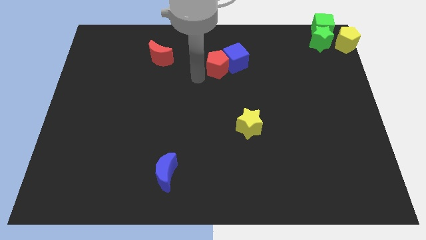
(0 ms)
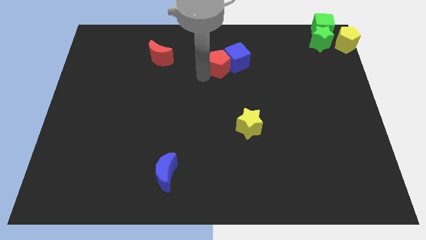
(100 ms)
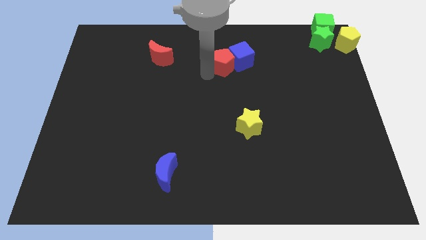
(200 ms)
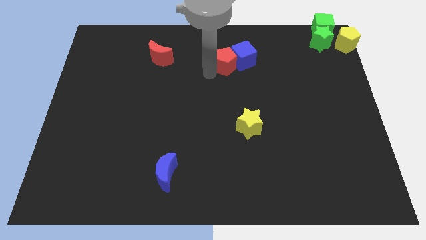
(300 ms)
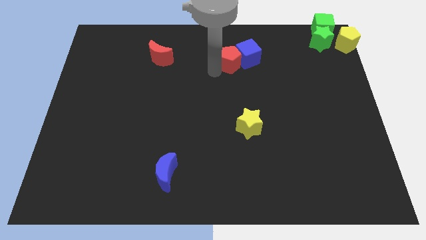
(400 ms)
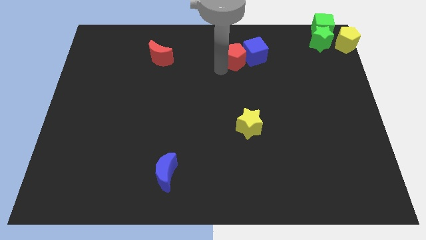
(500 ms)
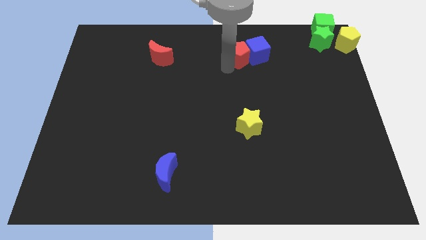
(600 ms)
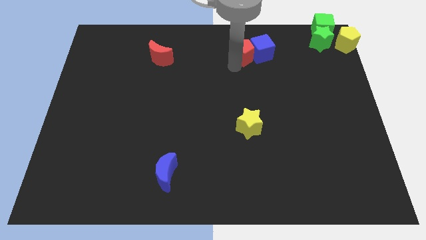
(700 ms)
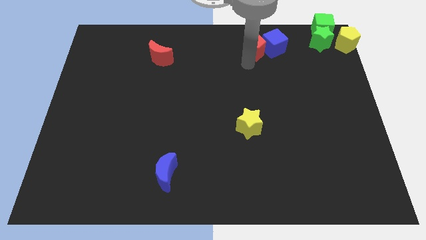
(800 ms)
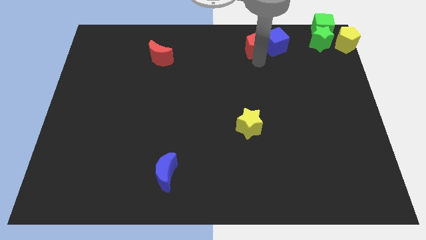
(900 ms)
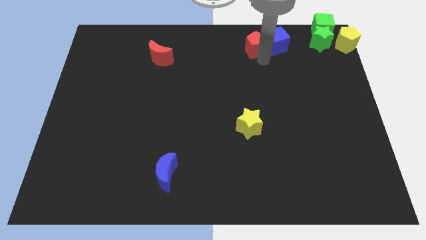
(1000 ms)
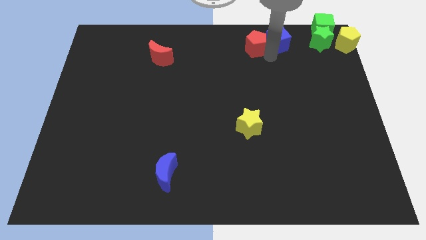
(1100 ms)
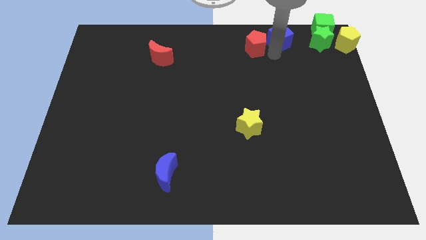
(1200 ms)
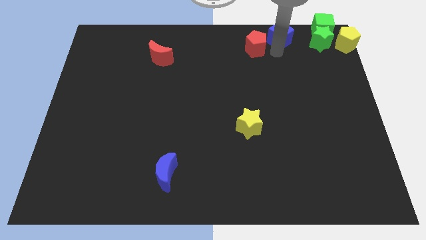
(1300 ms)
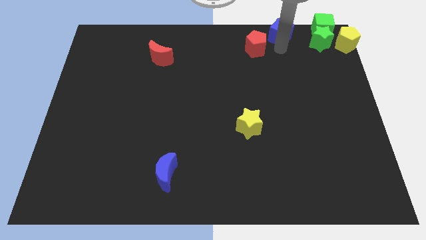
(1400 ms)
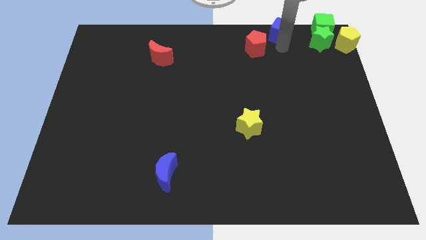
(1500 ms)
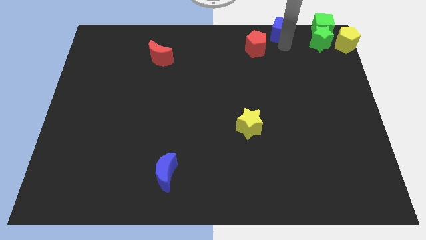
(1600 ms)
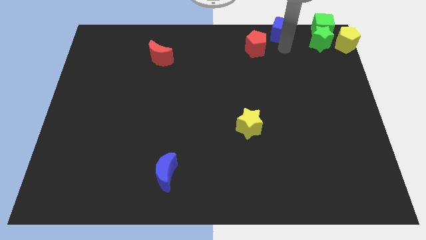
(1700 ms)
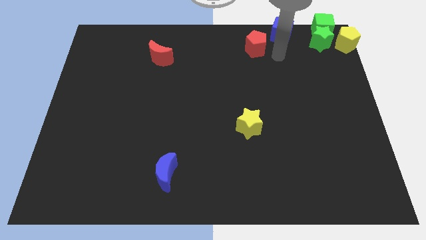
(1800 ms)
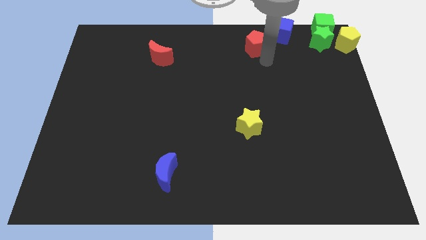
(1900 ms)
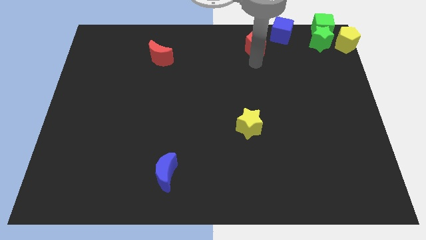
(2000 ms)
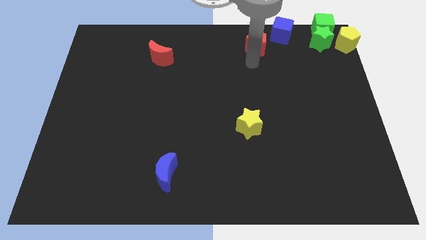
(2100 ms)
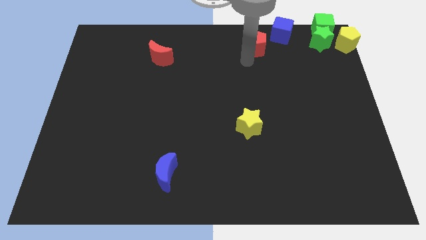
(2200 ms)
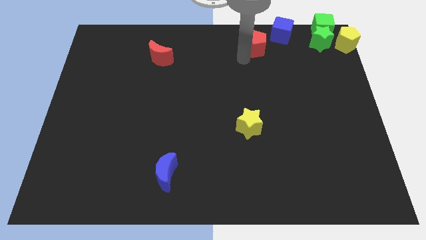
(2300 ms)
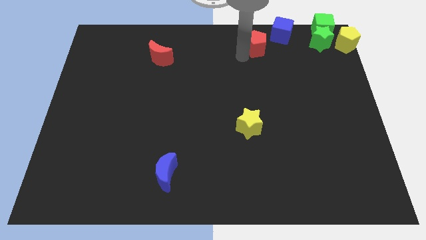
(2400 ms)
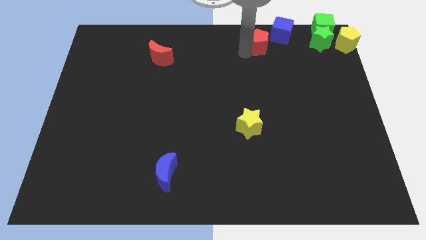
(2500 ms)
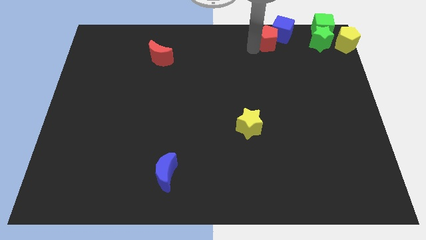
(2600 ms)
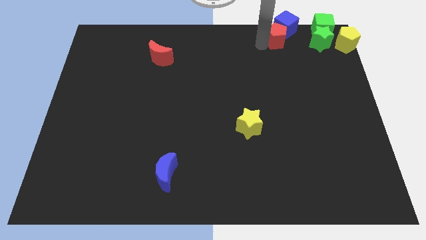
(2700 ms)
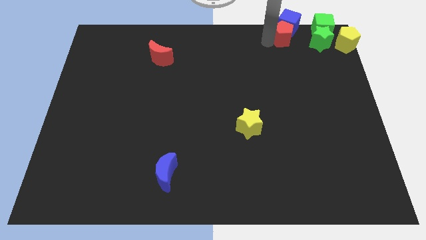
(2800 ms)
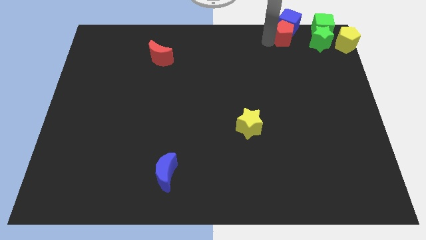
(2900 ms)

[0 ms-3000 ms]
push the red pentagon along with blue cube to the left of the green cube

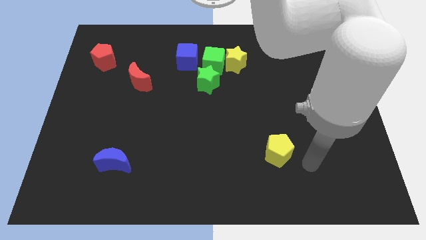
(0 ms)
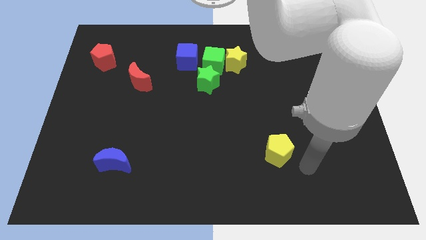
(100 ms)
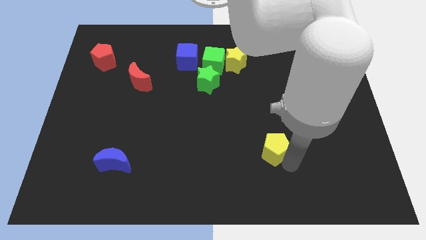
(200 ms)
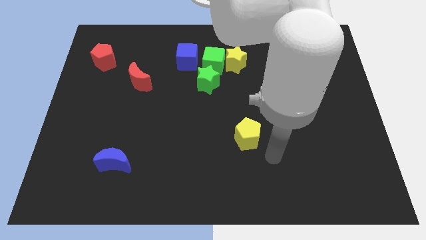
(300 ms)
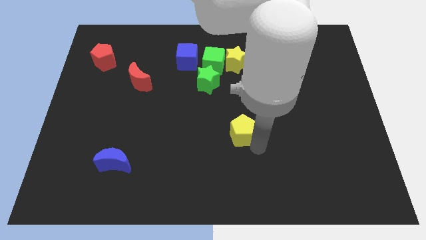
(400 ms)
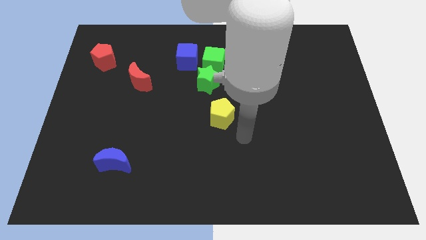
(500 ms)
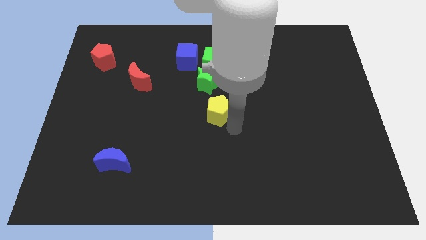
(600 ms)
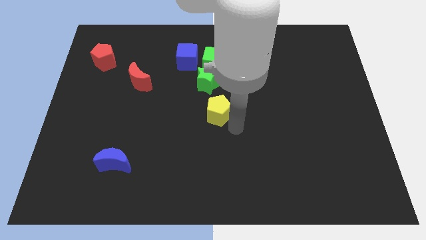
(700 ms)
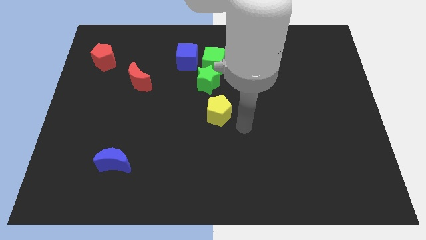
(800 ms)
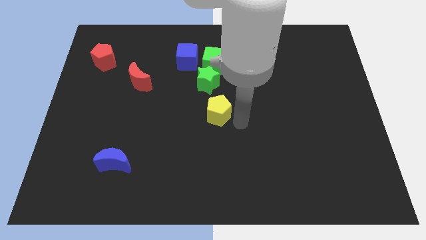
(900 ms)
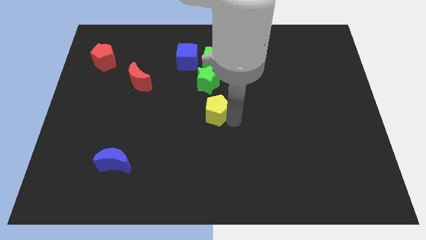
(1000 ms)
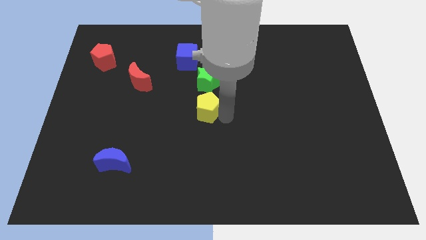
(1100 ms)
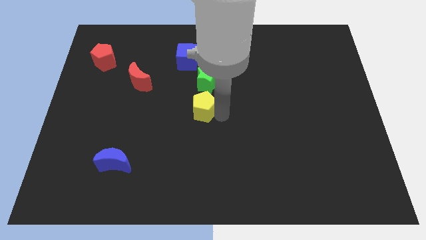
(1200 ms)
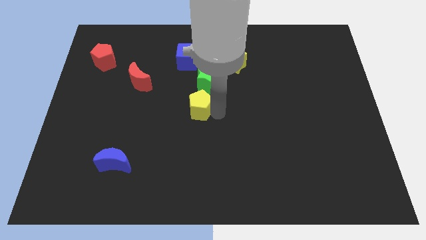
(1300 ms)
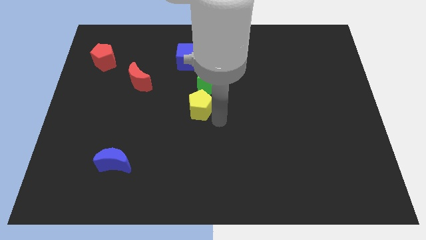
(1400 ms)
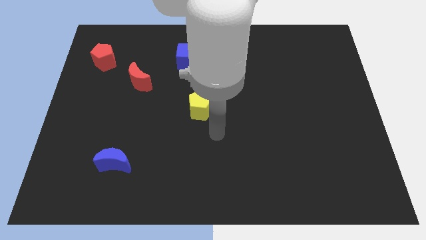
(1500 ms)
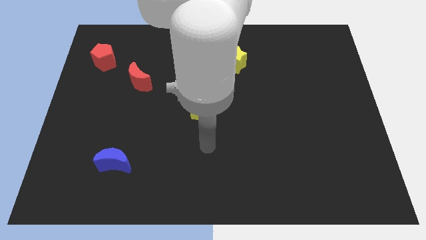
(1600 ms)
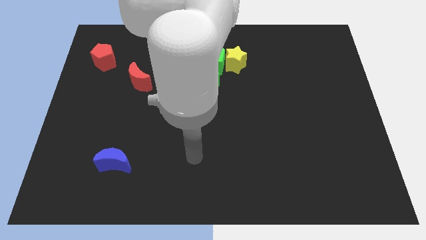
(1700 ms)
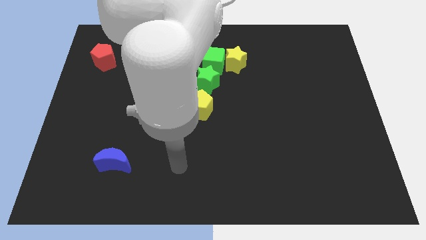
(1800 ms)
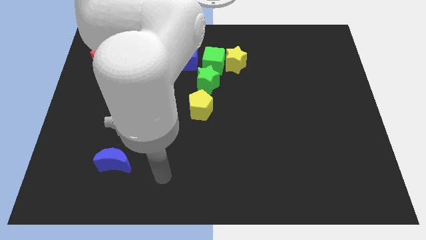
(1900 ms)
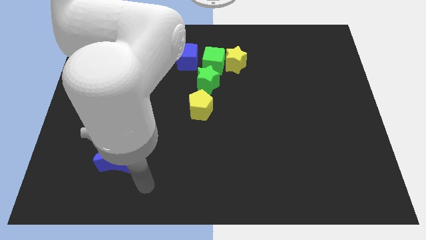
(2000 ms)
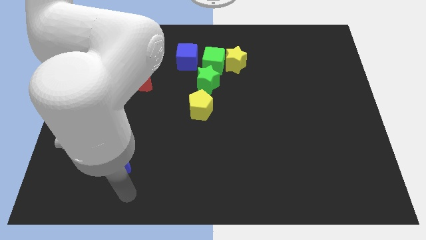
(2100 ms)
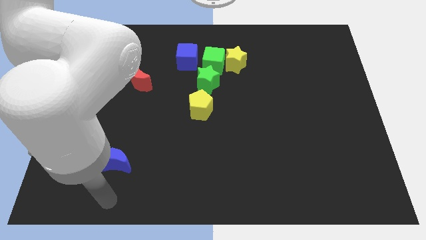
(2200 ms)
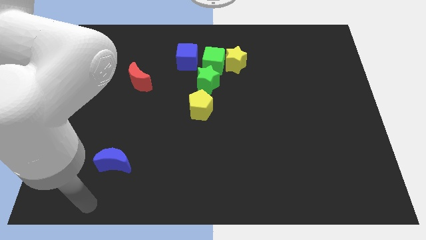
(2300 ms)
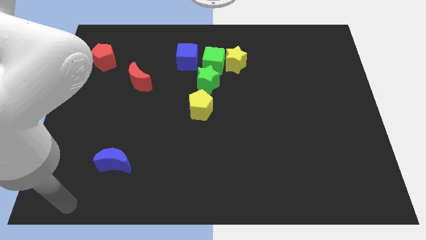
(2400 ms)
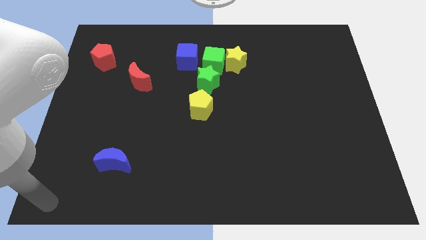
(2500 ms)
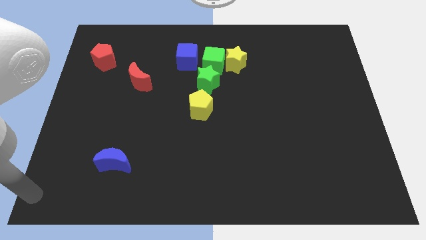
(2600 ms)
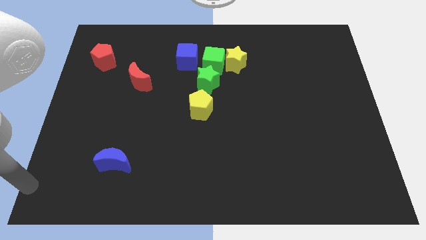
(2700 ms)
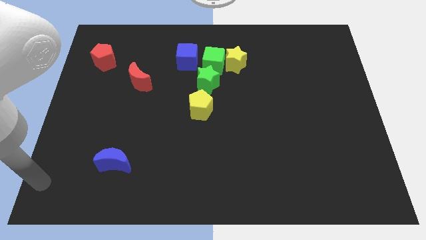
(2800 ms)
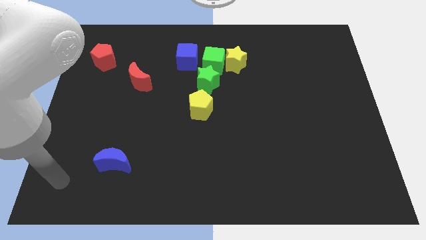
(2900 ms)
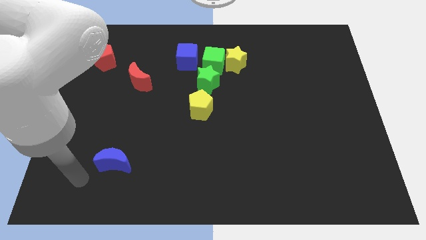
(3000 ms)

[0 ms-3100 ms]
push the yellow pentagon at the bottom of the green star

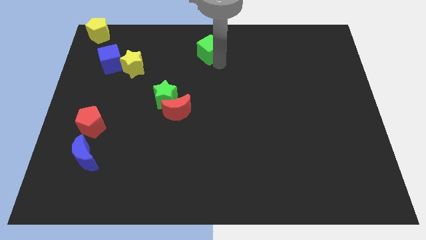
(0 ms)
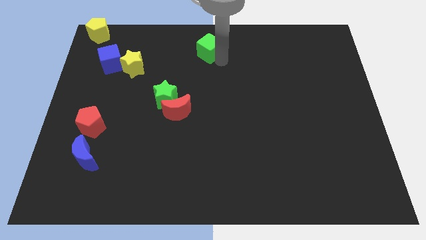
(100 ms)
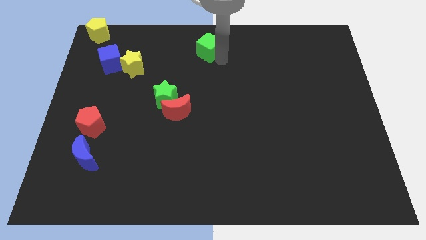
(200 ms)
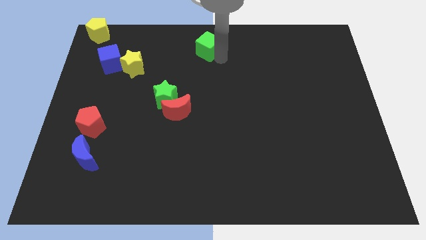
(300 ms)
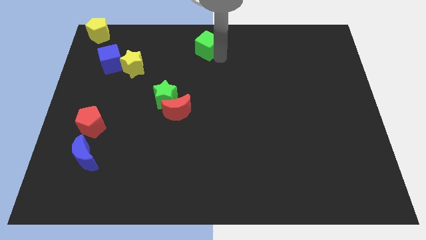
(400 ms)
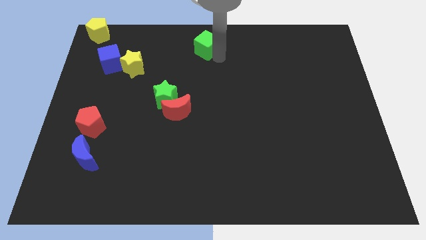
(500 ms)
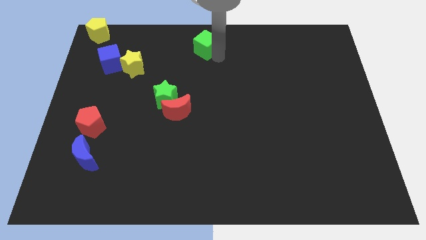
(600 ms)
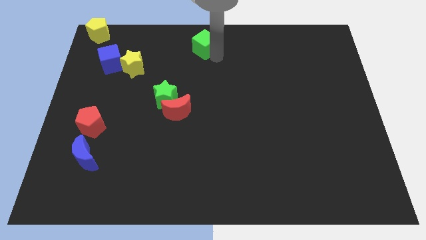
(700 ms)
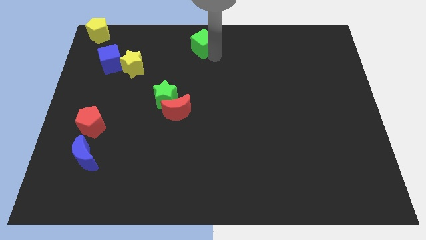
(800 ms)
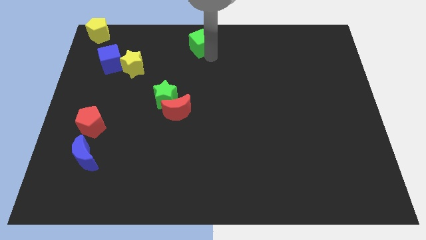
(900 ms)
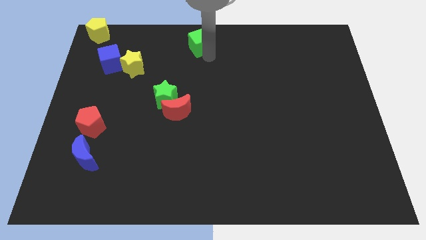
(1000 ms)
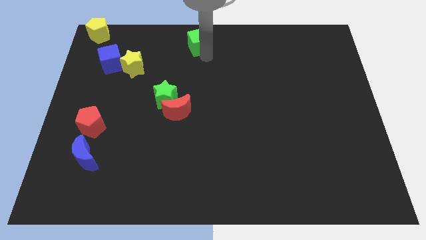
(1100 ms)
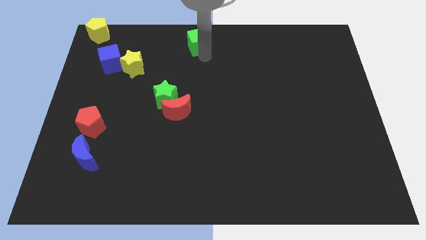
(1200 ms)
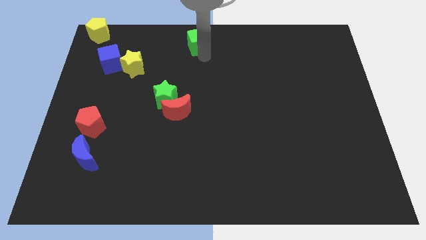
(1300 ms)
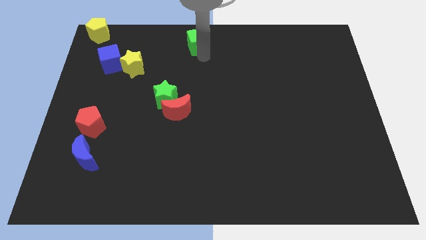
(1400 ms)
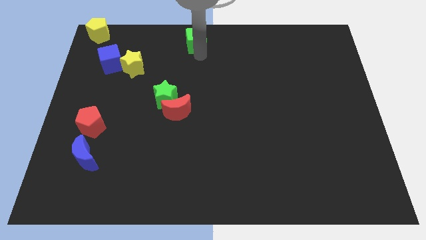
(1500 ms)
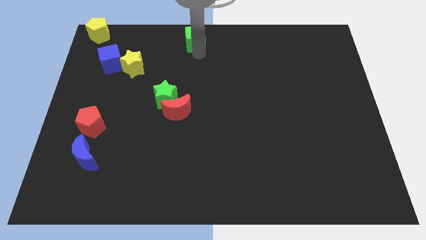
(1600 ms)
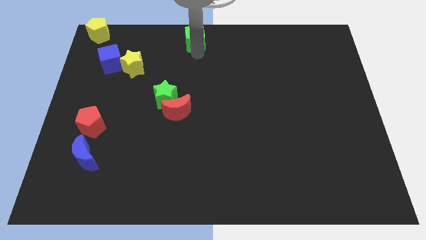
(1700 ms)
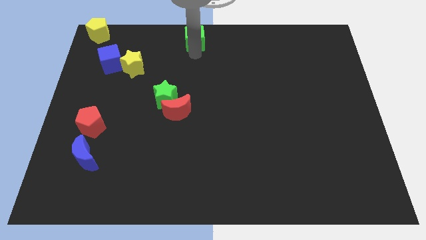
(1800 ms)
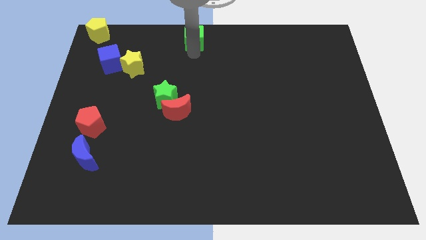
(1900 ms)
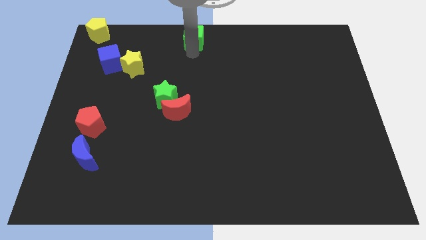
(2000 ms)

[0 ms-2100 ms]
place the green cube at the top center of the board

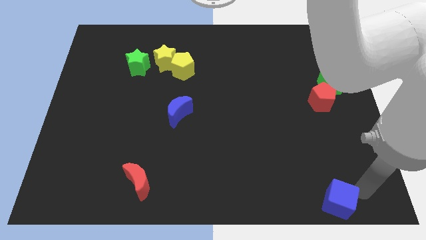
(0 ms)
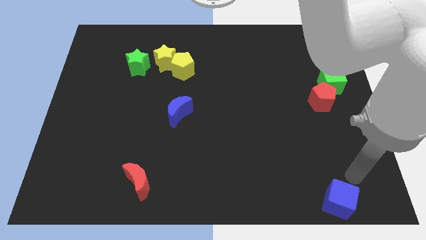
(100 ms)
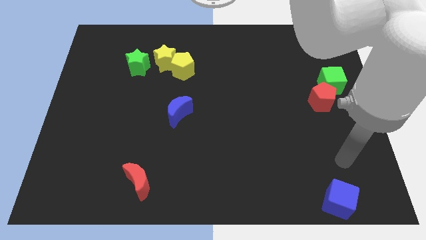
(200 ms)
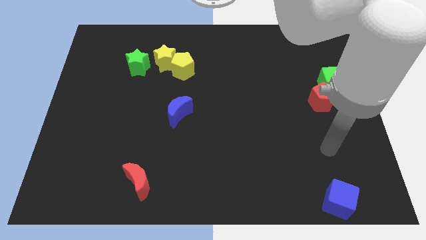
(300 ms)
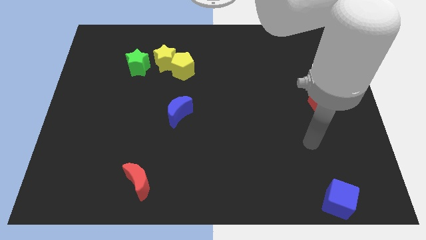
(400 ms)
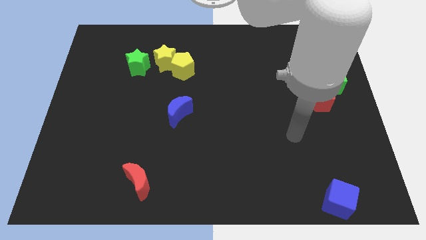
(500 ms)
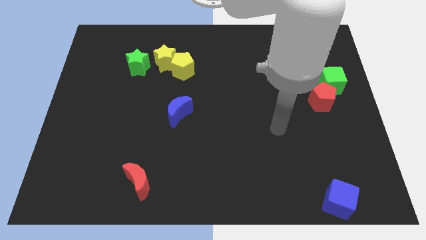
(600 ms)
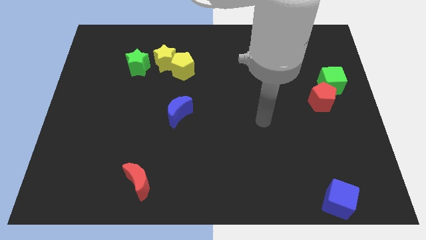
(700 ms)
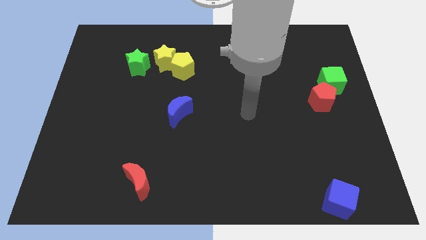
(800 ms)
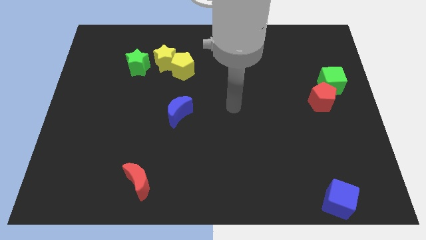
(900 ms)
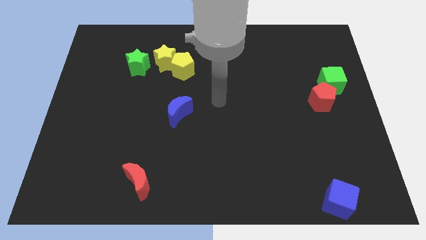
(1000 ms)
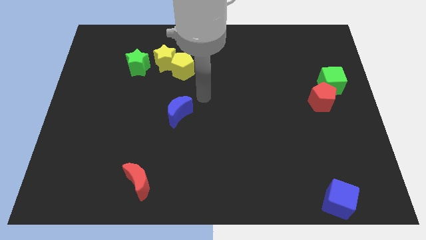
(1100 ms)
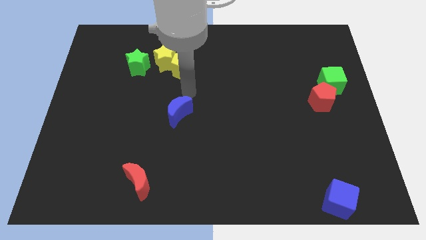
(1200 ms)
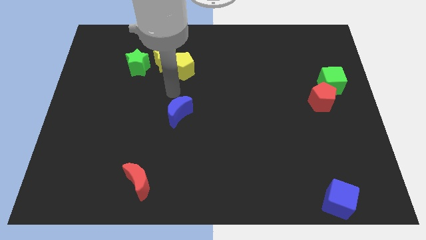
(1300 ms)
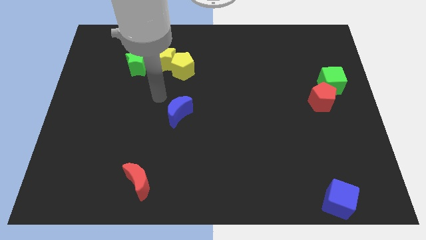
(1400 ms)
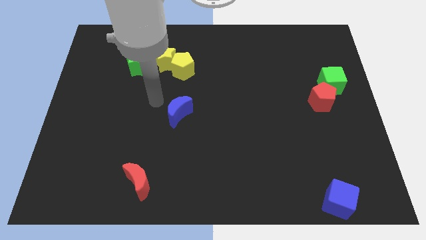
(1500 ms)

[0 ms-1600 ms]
place the arm to the left of the blue crescent
